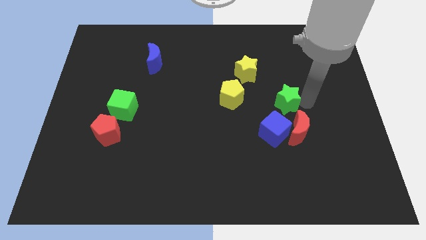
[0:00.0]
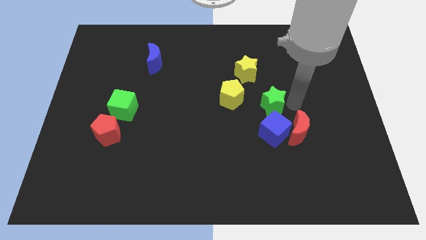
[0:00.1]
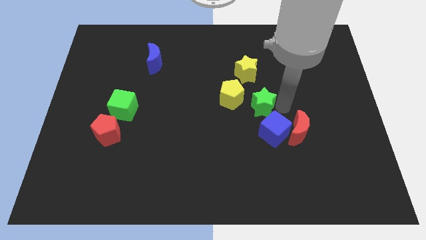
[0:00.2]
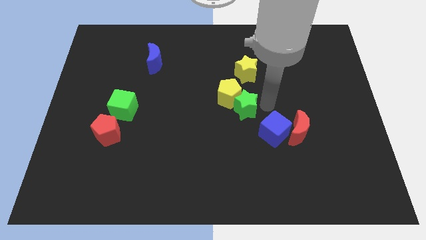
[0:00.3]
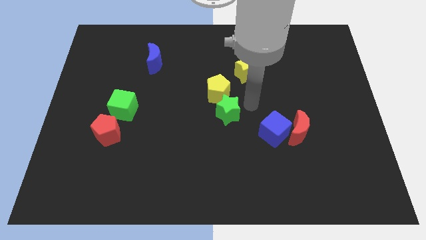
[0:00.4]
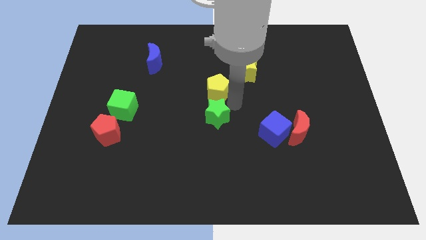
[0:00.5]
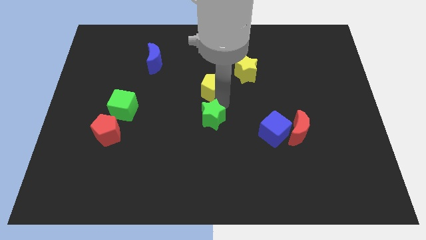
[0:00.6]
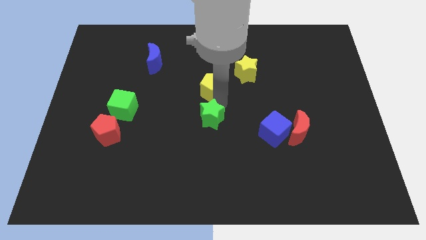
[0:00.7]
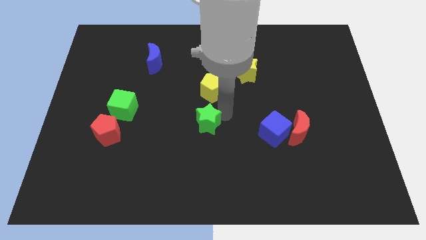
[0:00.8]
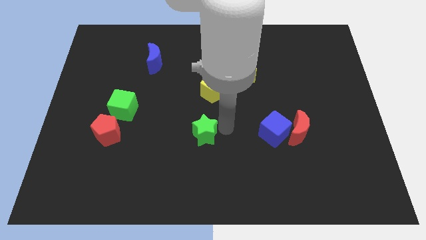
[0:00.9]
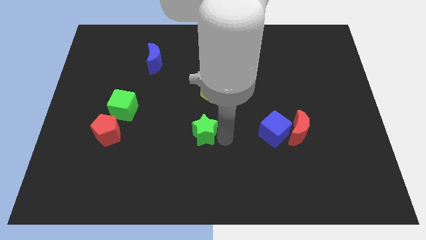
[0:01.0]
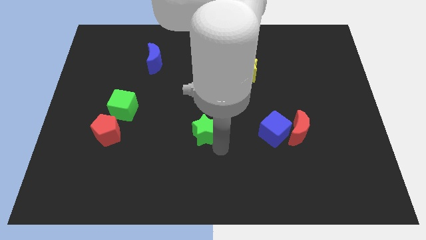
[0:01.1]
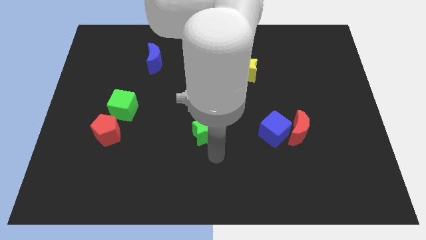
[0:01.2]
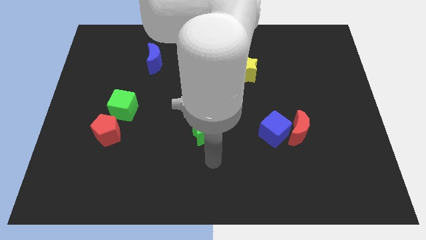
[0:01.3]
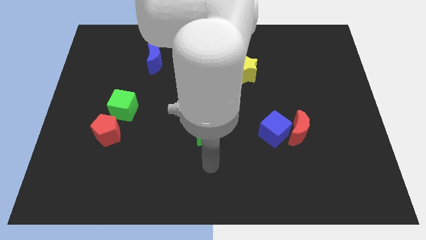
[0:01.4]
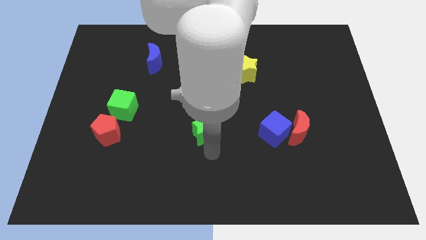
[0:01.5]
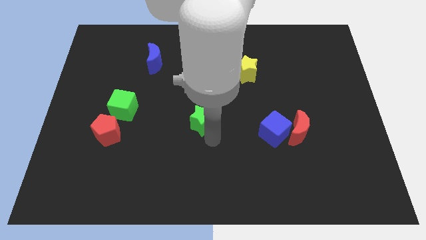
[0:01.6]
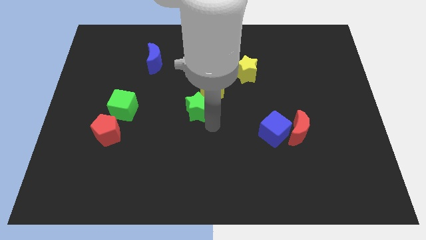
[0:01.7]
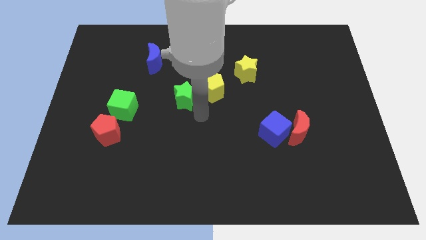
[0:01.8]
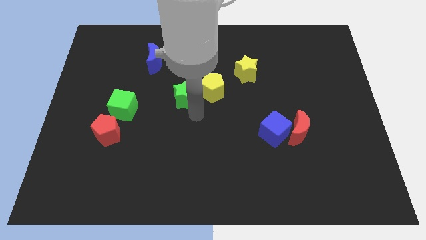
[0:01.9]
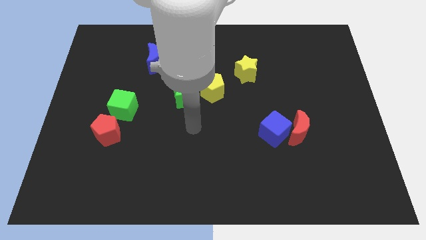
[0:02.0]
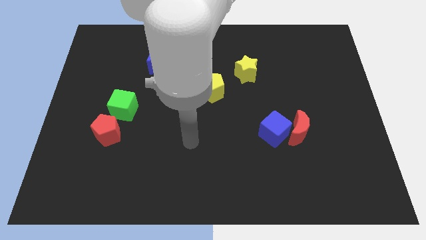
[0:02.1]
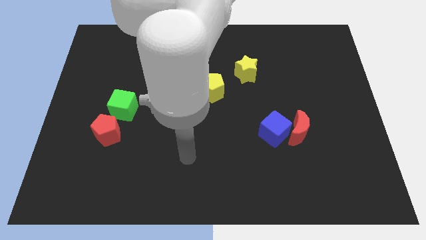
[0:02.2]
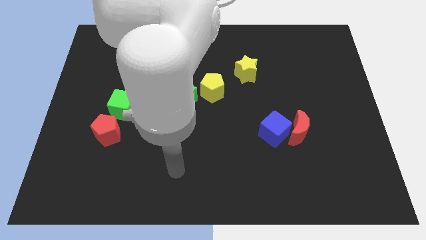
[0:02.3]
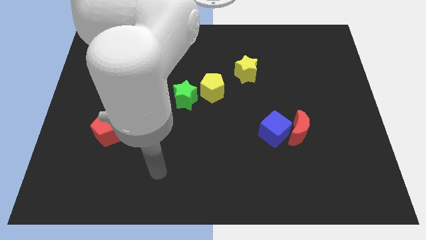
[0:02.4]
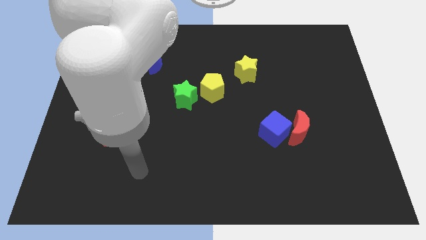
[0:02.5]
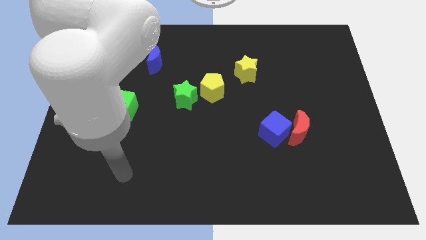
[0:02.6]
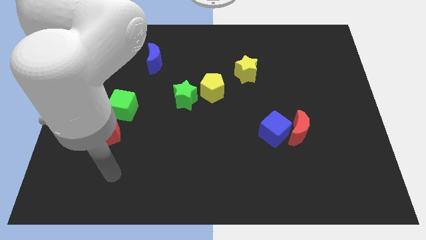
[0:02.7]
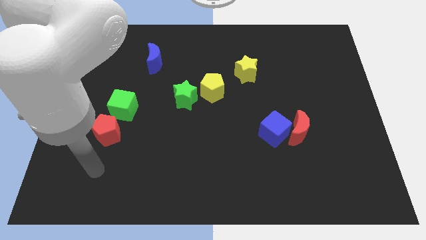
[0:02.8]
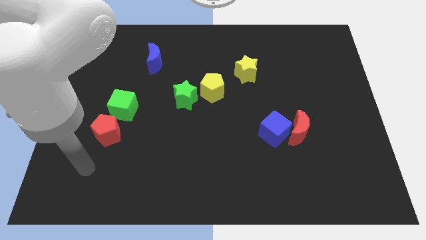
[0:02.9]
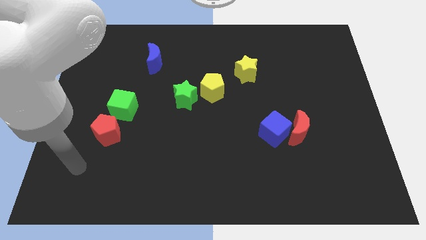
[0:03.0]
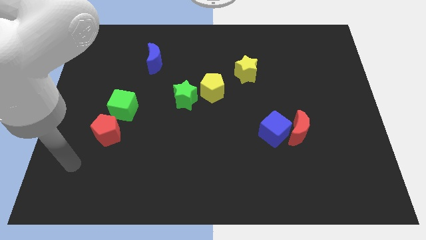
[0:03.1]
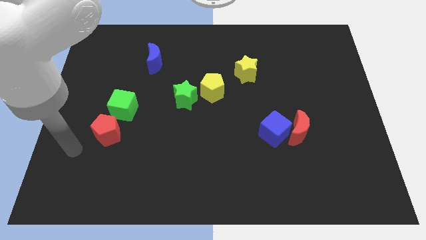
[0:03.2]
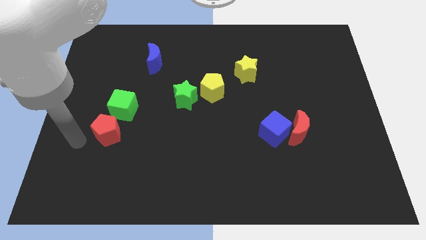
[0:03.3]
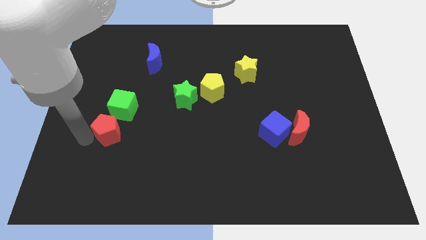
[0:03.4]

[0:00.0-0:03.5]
put the green star diagonally top left to the blue cube

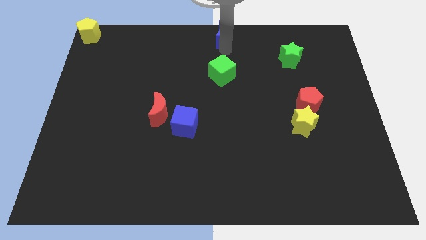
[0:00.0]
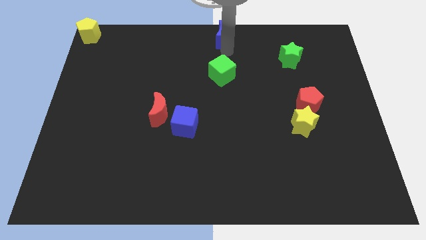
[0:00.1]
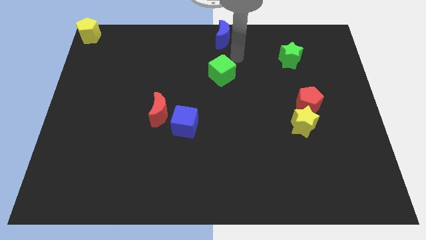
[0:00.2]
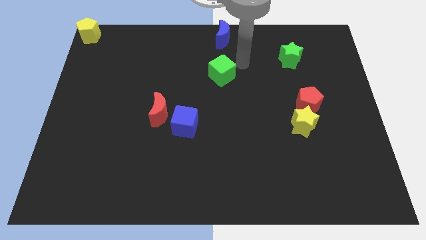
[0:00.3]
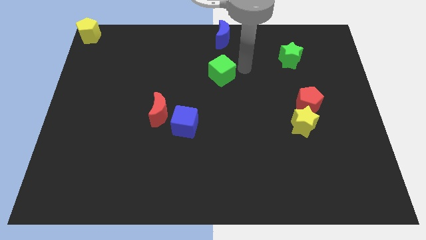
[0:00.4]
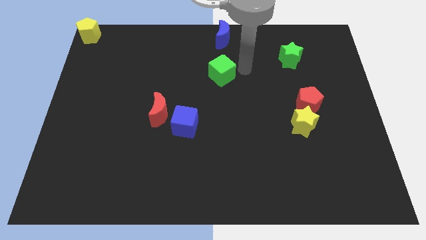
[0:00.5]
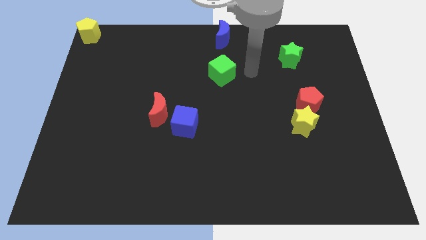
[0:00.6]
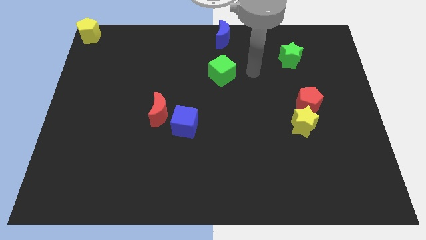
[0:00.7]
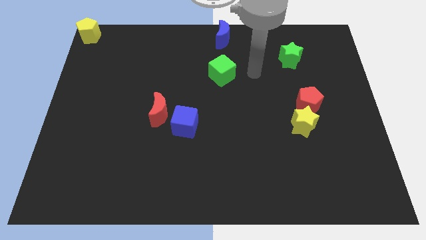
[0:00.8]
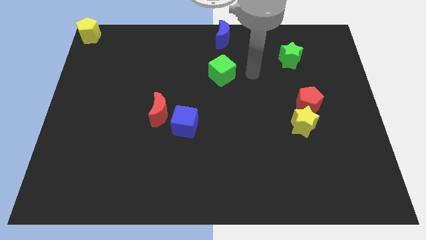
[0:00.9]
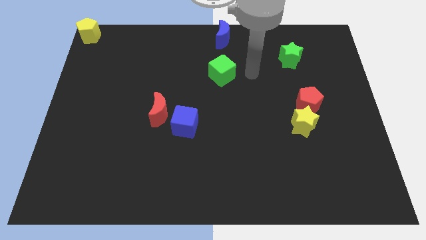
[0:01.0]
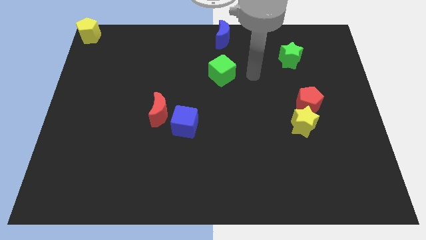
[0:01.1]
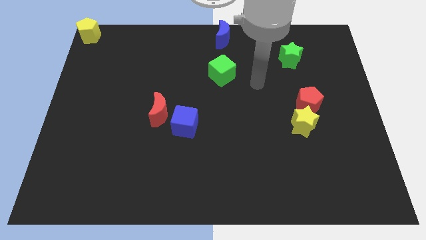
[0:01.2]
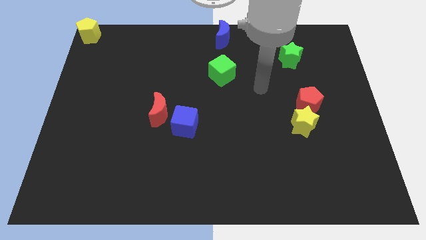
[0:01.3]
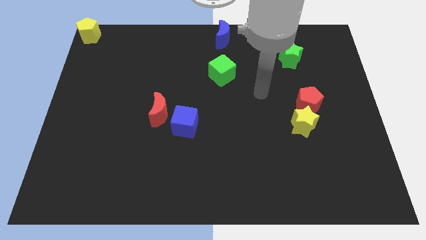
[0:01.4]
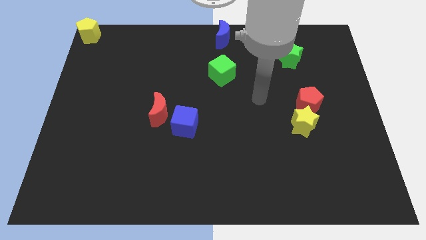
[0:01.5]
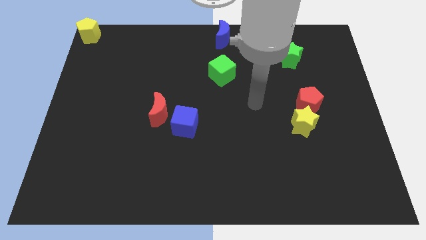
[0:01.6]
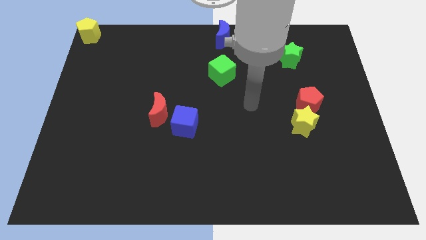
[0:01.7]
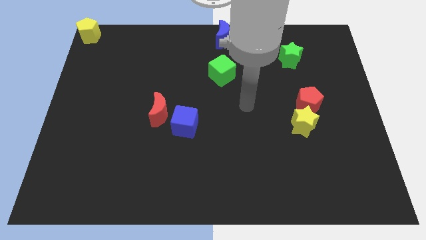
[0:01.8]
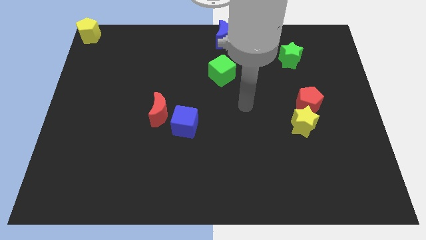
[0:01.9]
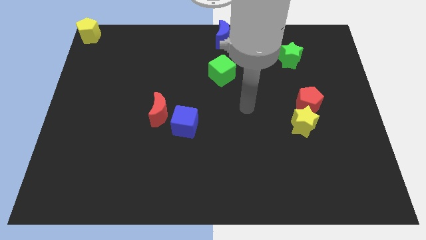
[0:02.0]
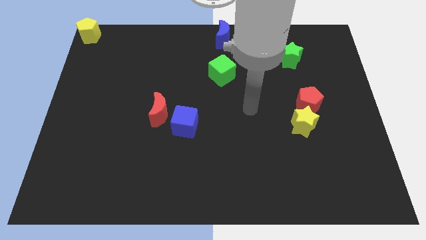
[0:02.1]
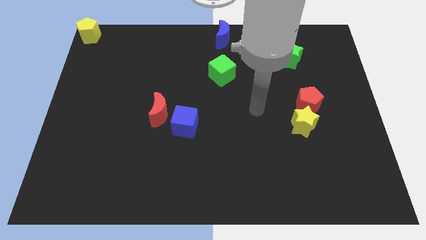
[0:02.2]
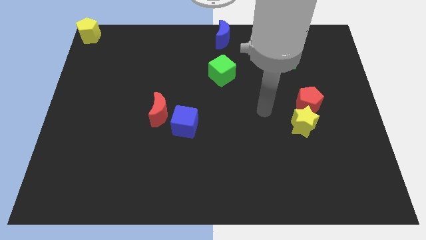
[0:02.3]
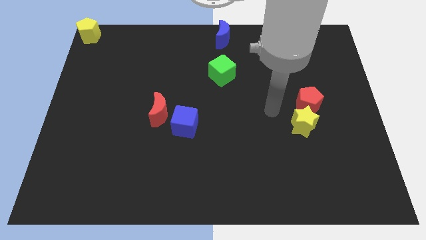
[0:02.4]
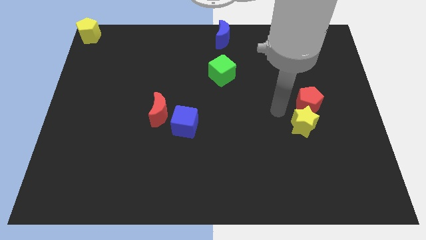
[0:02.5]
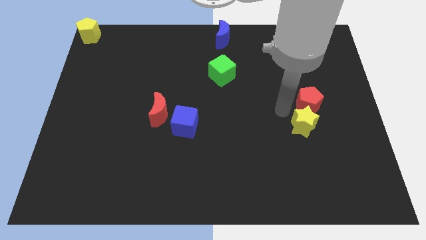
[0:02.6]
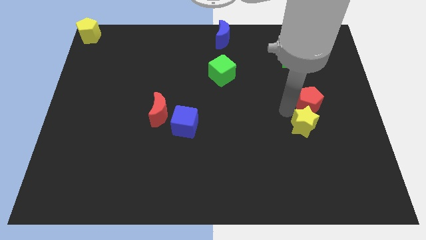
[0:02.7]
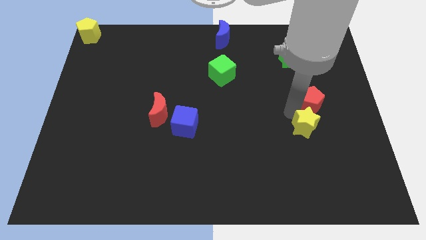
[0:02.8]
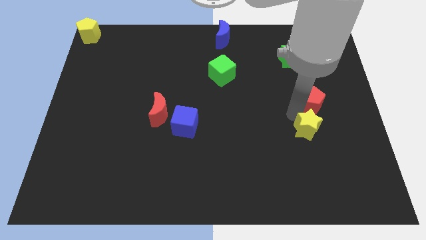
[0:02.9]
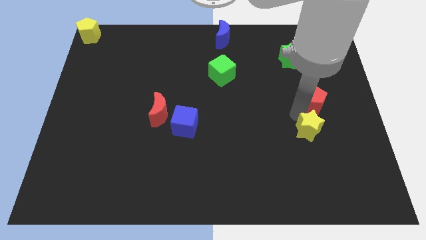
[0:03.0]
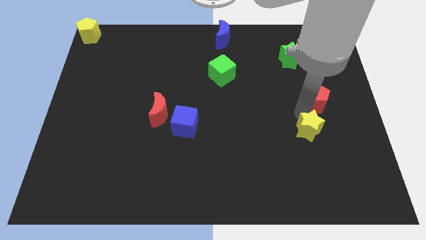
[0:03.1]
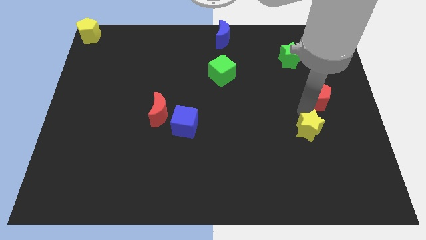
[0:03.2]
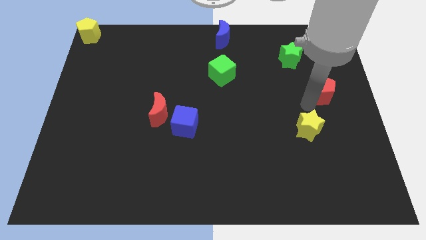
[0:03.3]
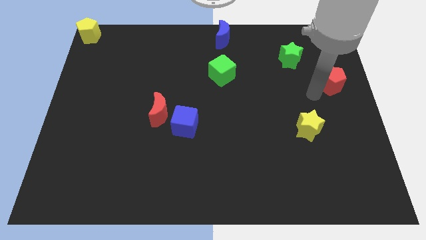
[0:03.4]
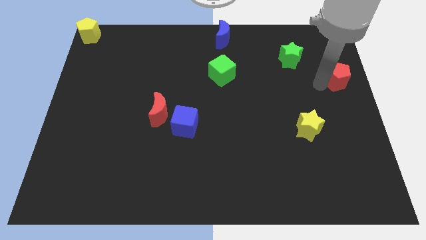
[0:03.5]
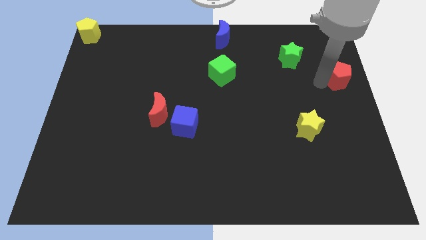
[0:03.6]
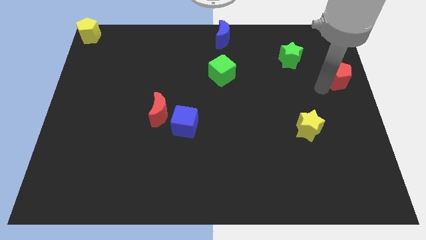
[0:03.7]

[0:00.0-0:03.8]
separate the red pentagon from the yellow star

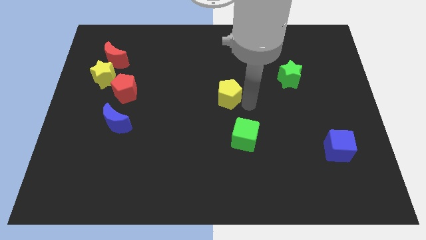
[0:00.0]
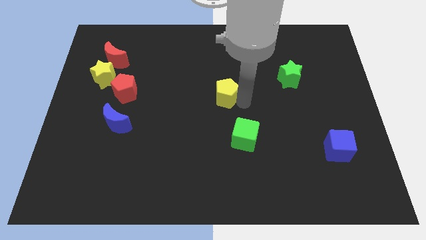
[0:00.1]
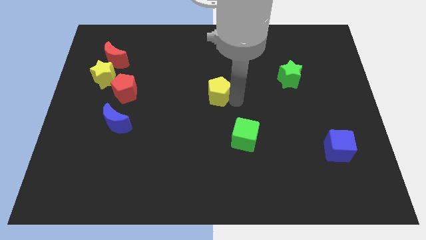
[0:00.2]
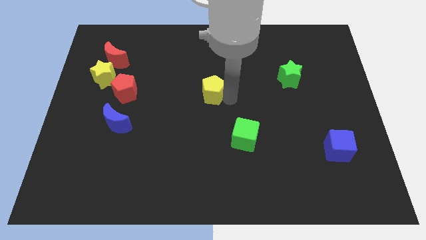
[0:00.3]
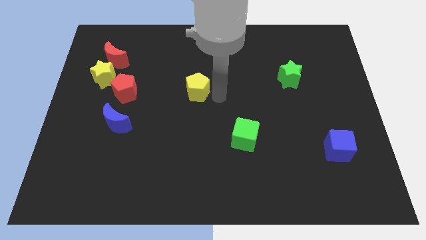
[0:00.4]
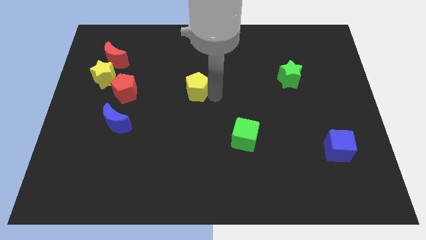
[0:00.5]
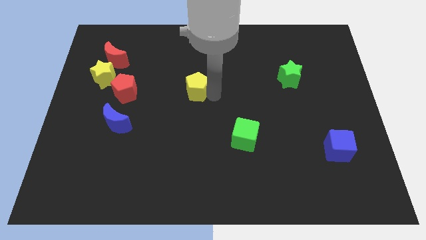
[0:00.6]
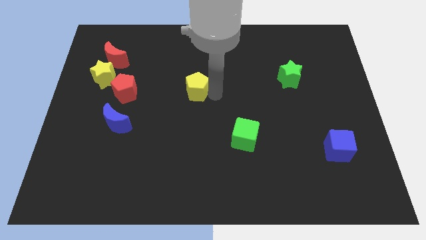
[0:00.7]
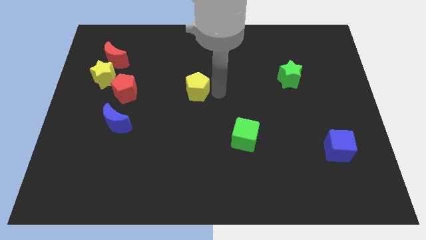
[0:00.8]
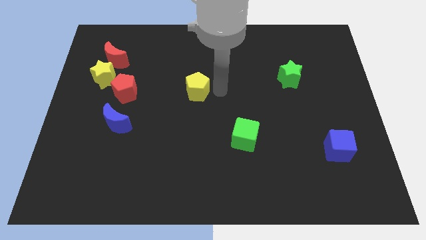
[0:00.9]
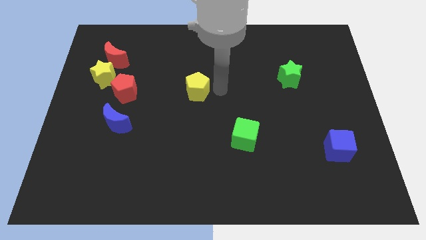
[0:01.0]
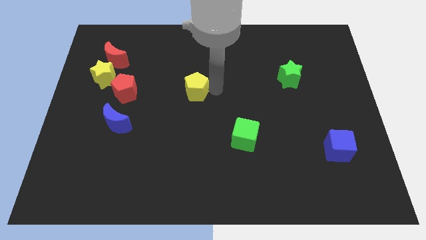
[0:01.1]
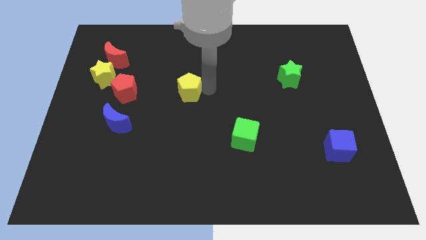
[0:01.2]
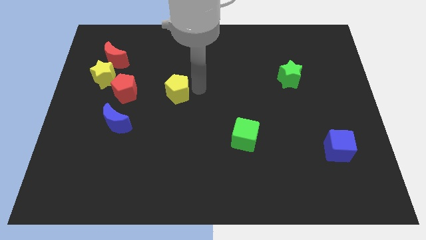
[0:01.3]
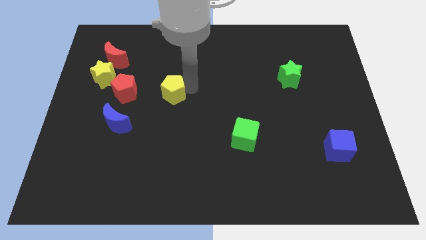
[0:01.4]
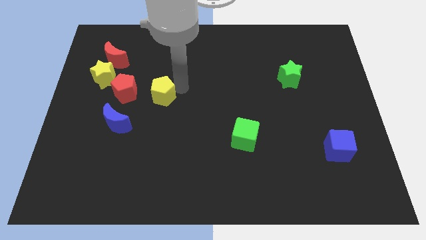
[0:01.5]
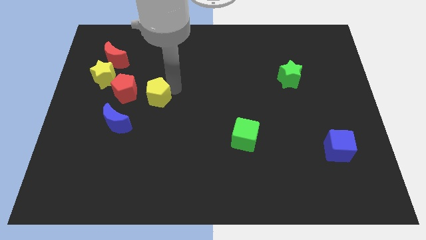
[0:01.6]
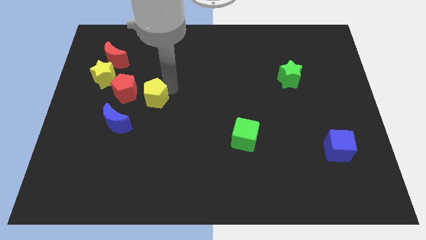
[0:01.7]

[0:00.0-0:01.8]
move yellow pentagon closer to the red pentagon
